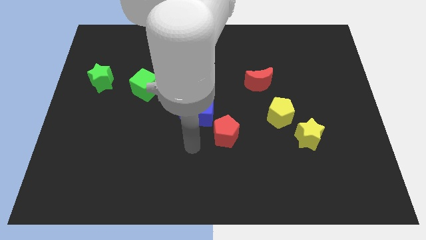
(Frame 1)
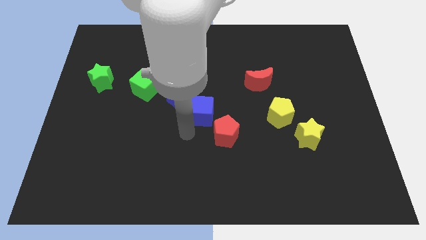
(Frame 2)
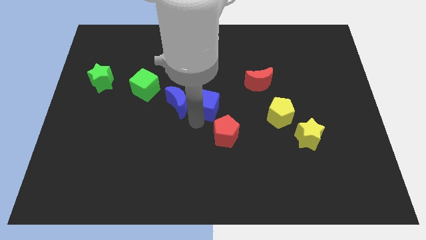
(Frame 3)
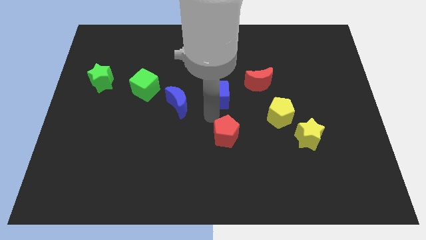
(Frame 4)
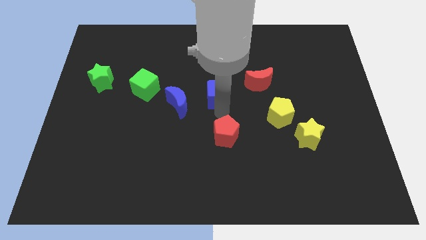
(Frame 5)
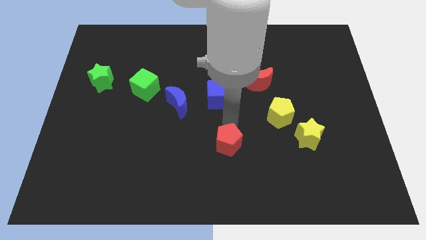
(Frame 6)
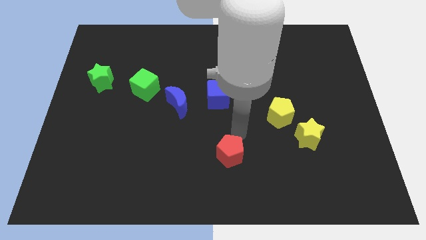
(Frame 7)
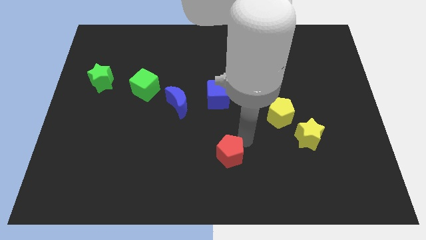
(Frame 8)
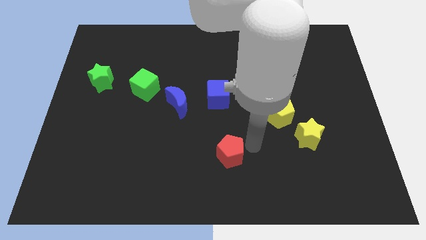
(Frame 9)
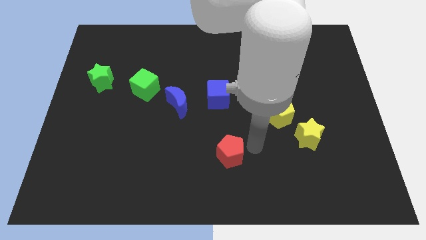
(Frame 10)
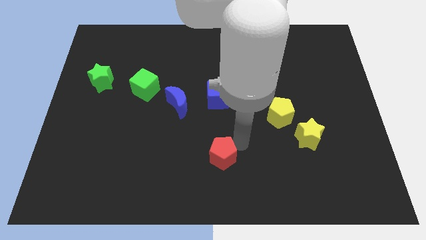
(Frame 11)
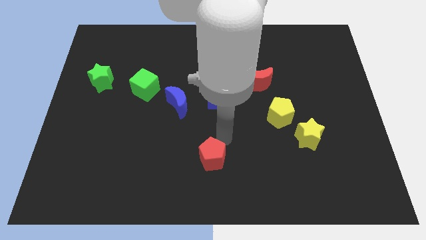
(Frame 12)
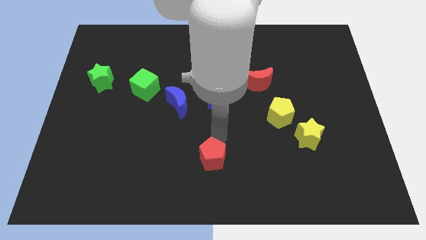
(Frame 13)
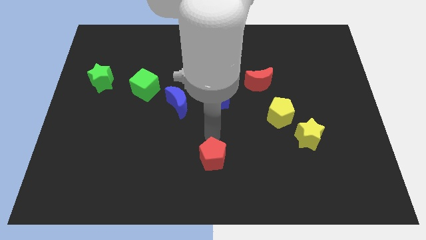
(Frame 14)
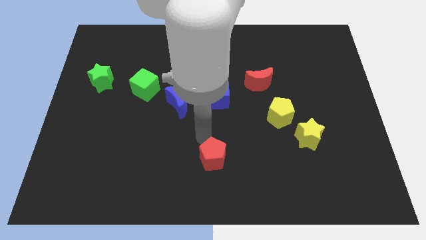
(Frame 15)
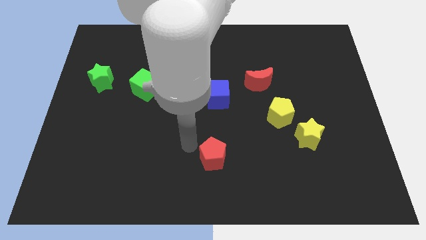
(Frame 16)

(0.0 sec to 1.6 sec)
push the blue cube to the right of the red moon

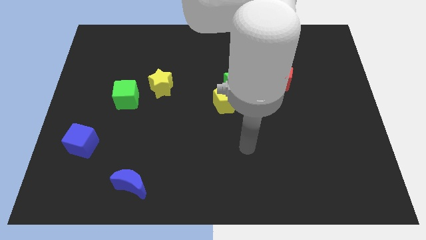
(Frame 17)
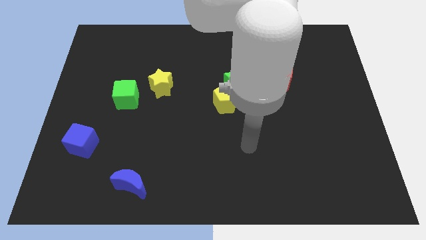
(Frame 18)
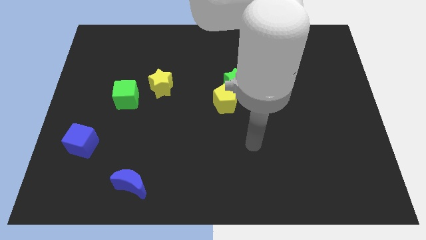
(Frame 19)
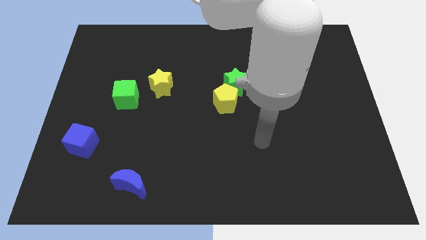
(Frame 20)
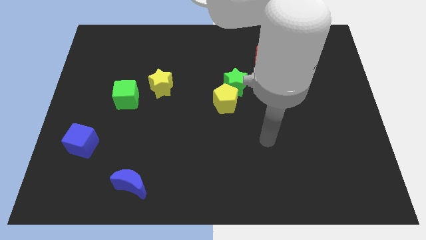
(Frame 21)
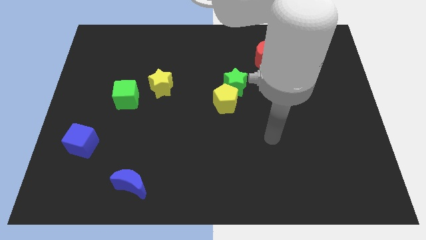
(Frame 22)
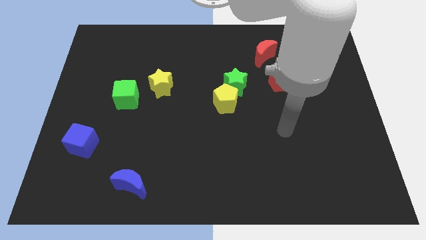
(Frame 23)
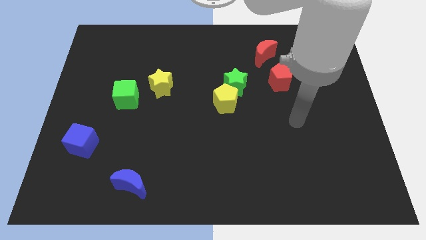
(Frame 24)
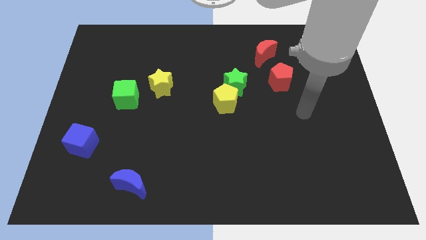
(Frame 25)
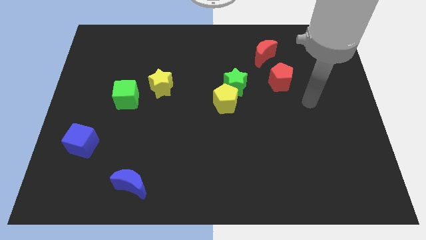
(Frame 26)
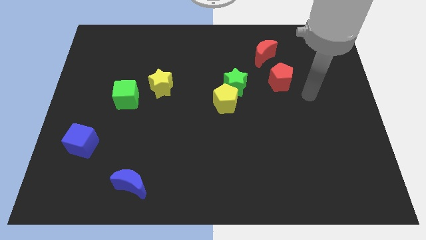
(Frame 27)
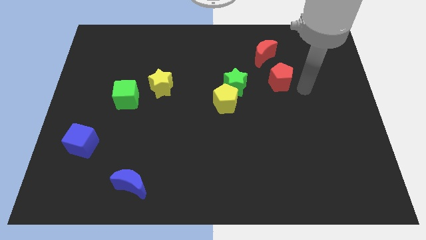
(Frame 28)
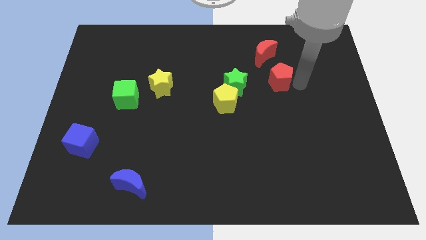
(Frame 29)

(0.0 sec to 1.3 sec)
move your arm right to the red pentagon

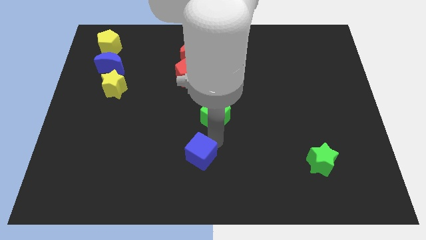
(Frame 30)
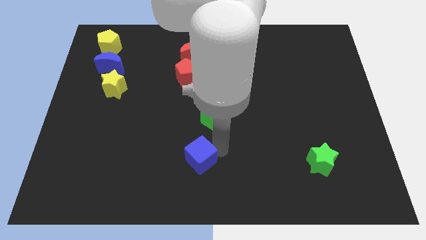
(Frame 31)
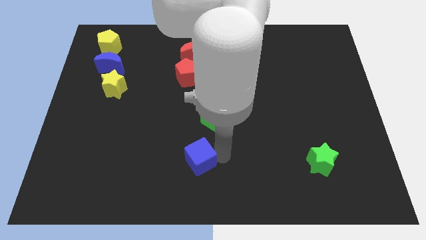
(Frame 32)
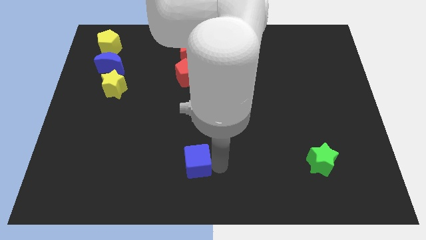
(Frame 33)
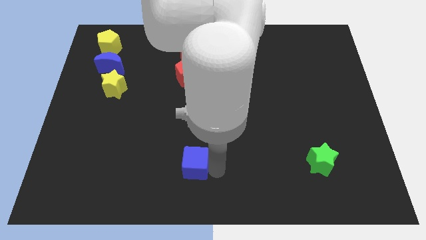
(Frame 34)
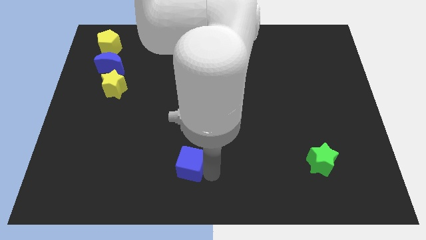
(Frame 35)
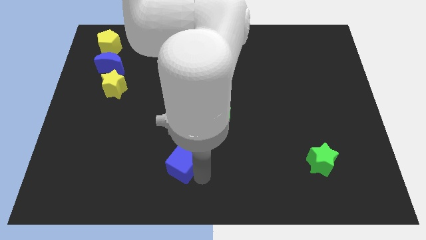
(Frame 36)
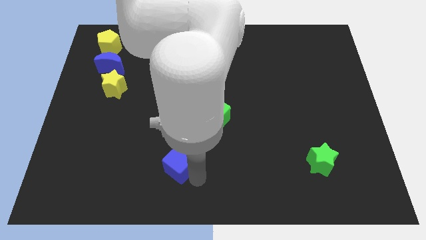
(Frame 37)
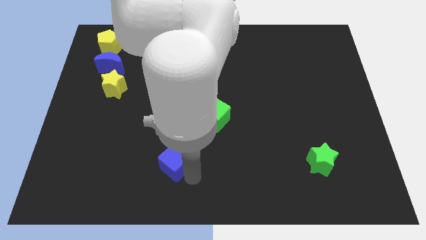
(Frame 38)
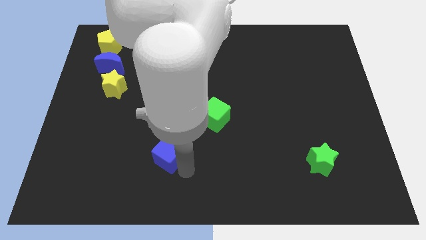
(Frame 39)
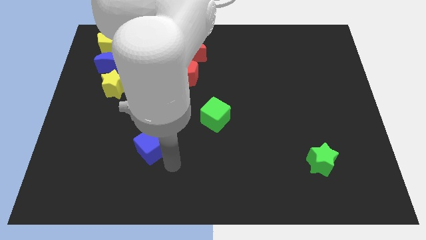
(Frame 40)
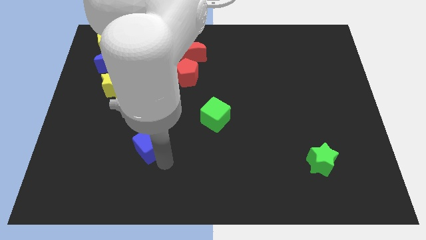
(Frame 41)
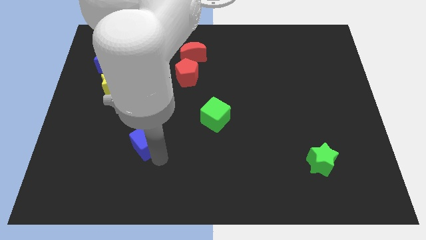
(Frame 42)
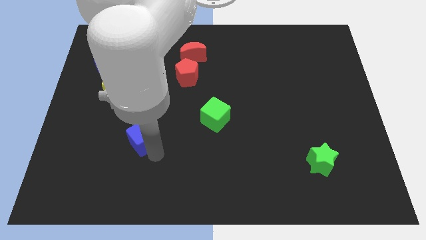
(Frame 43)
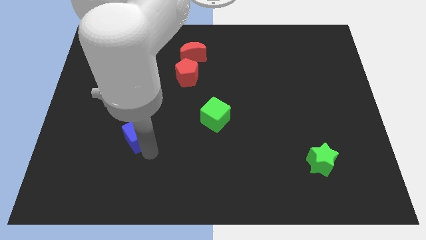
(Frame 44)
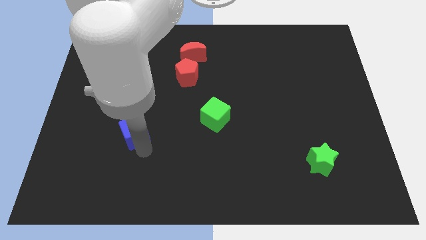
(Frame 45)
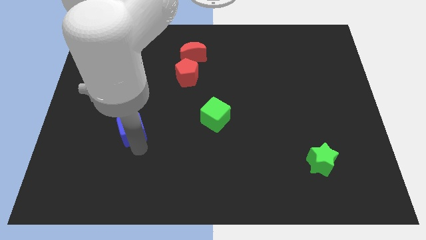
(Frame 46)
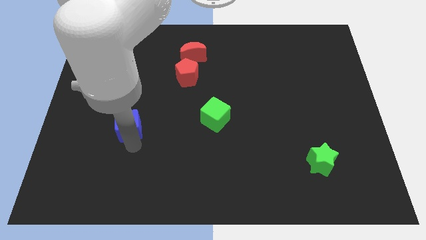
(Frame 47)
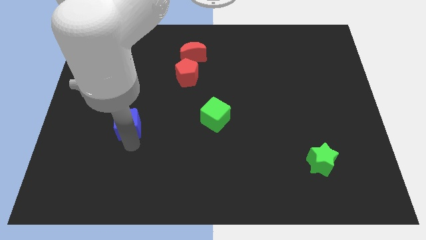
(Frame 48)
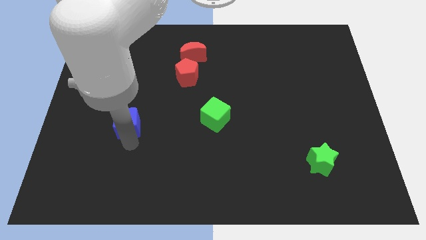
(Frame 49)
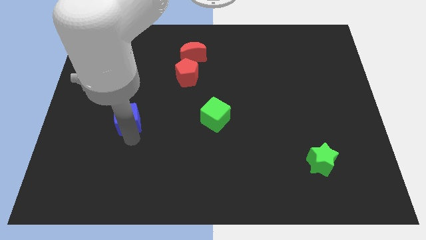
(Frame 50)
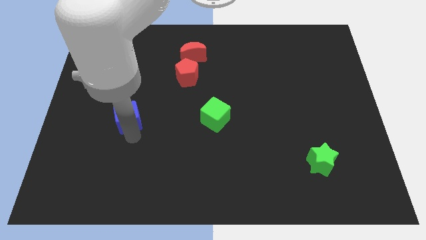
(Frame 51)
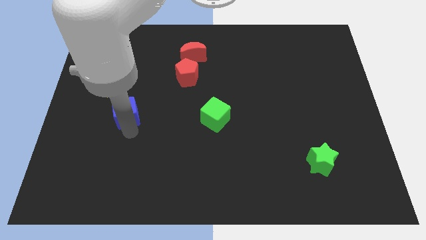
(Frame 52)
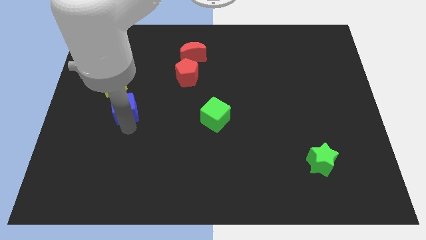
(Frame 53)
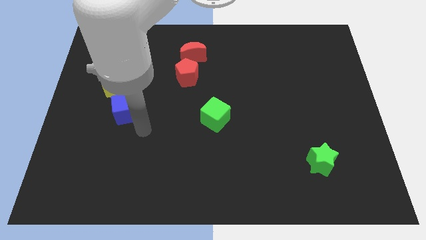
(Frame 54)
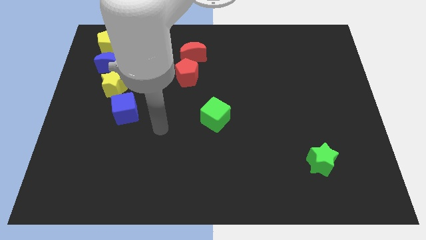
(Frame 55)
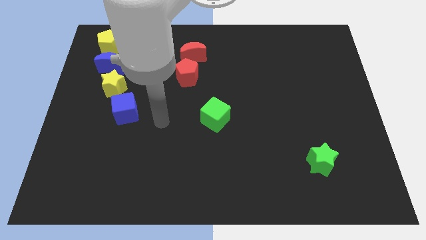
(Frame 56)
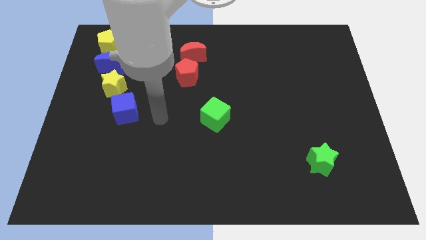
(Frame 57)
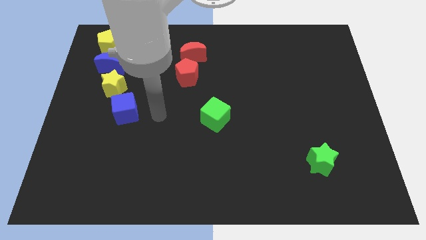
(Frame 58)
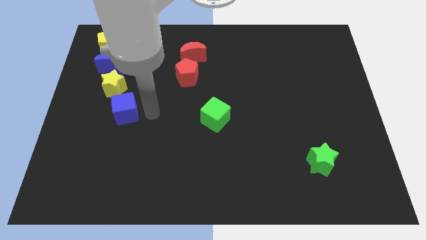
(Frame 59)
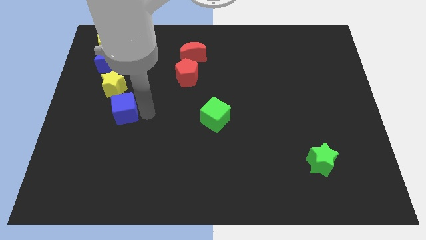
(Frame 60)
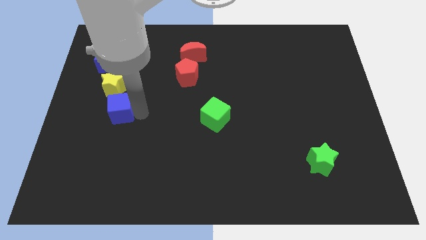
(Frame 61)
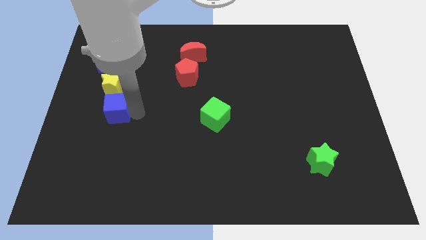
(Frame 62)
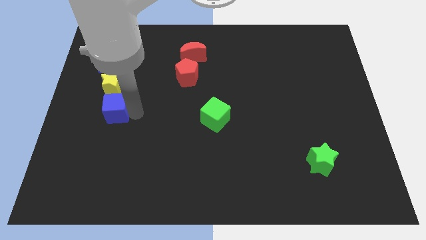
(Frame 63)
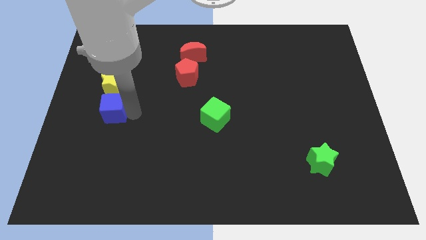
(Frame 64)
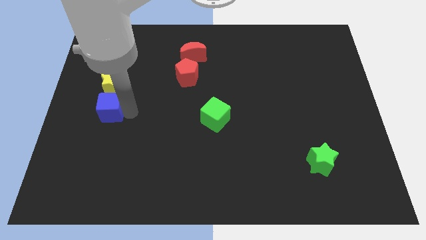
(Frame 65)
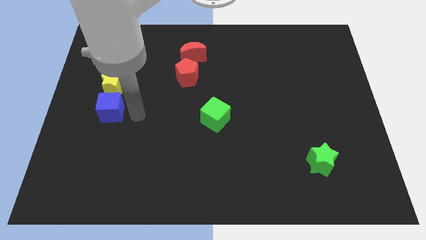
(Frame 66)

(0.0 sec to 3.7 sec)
place the blue cube below the yellow star

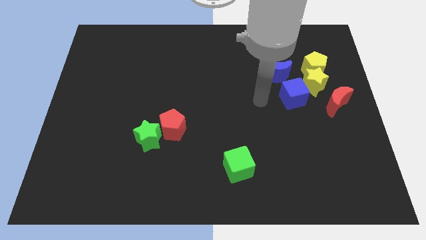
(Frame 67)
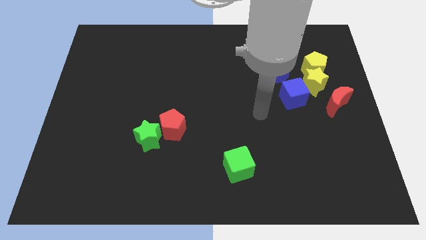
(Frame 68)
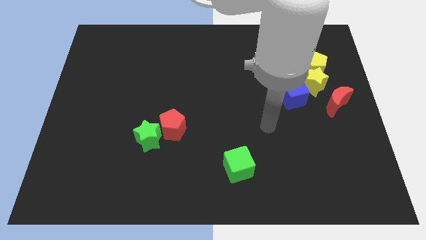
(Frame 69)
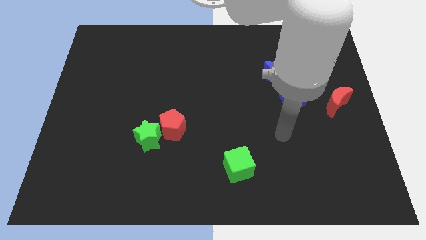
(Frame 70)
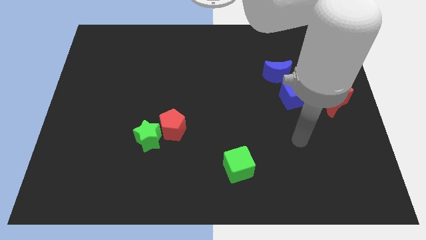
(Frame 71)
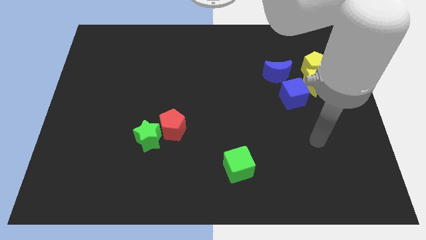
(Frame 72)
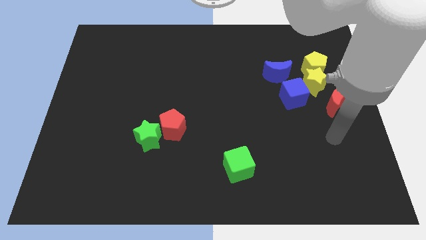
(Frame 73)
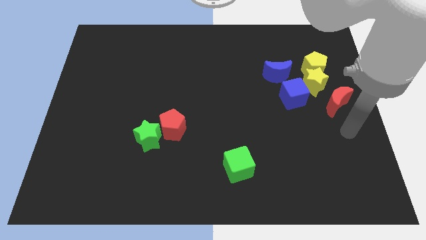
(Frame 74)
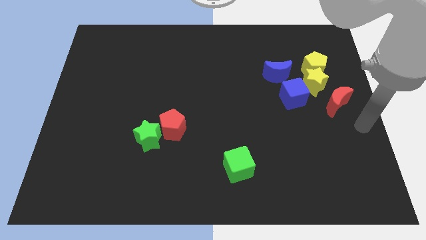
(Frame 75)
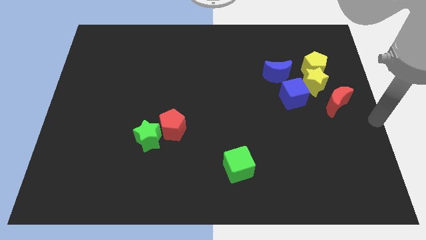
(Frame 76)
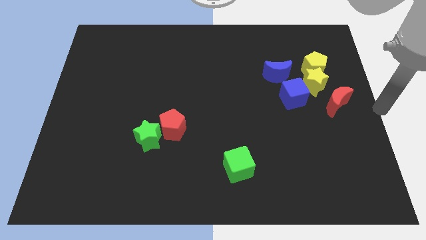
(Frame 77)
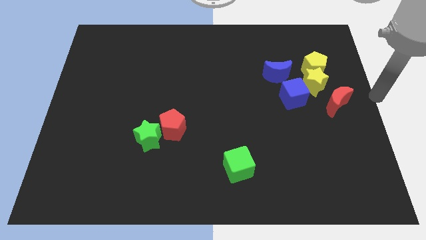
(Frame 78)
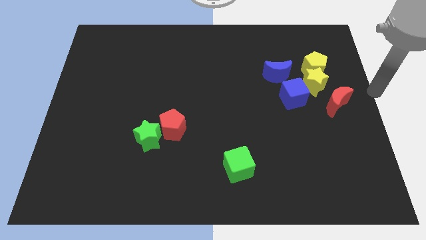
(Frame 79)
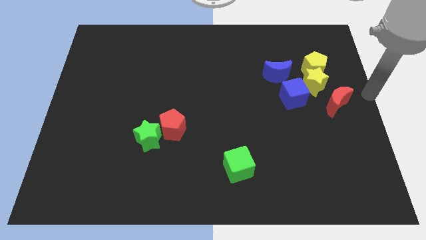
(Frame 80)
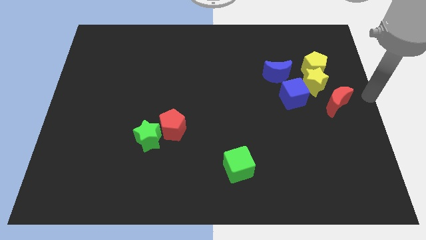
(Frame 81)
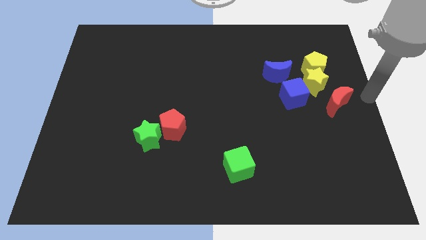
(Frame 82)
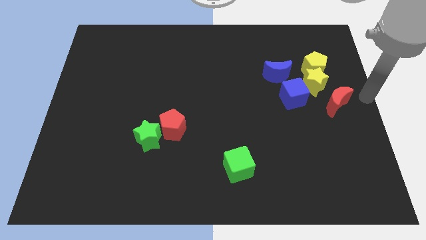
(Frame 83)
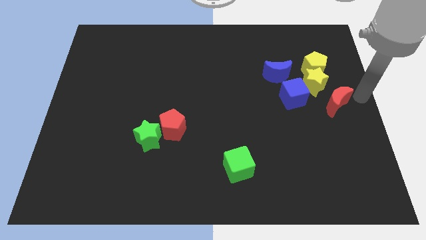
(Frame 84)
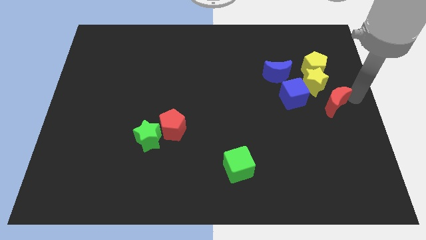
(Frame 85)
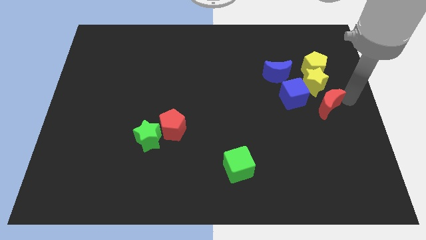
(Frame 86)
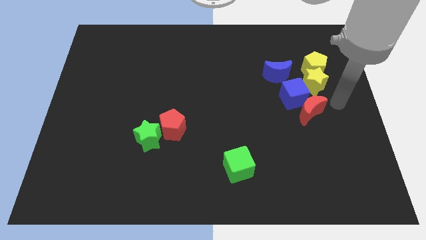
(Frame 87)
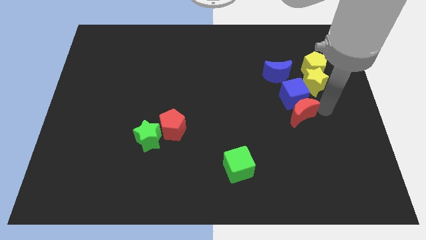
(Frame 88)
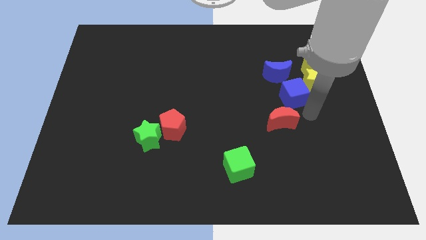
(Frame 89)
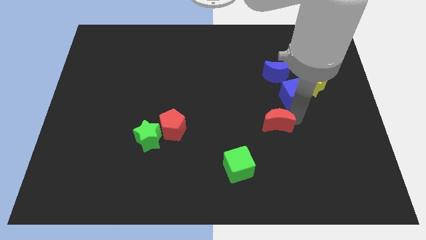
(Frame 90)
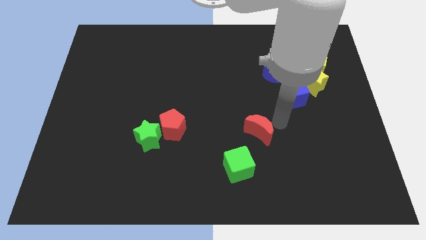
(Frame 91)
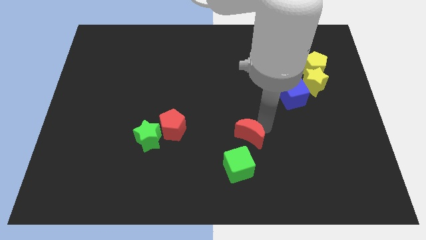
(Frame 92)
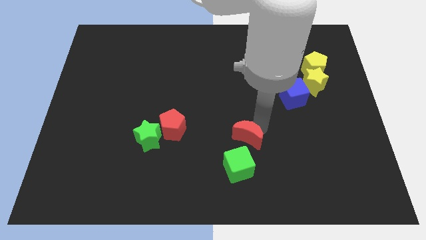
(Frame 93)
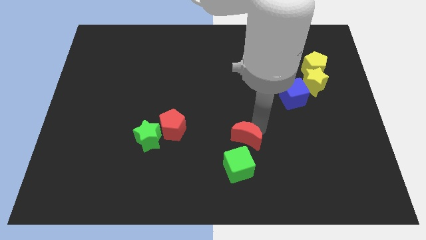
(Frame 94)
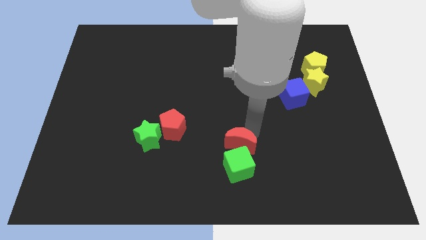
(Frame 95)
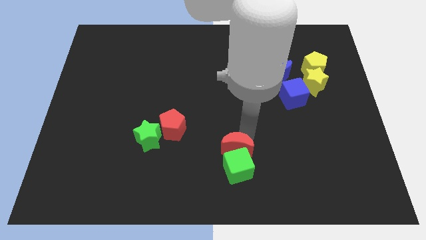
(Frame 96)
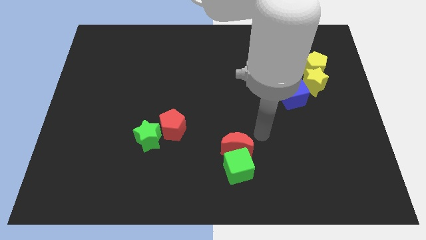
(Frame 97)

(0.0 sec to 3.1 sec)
slide red moon into green cube
